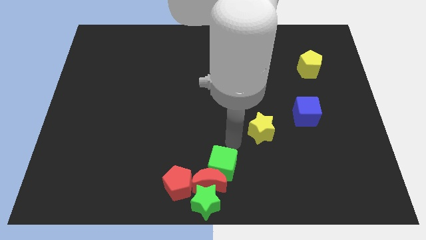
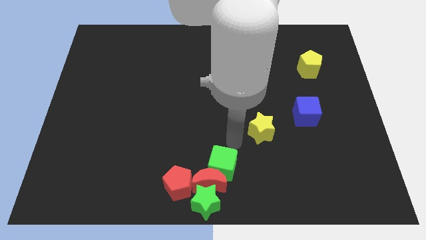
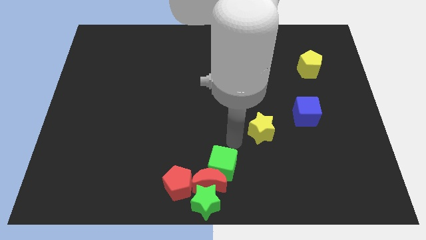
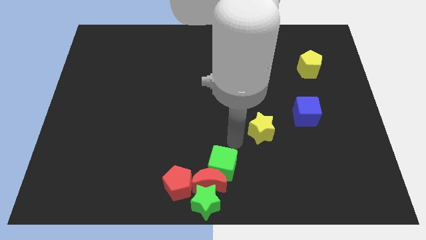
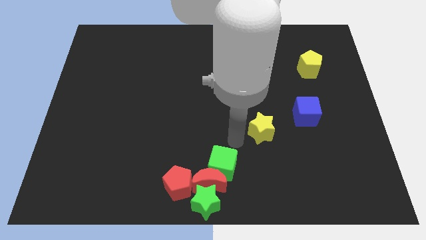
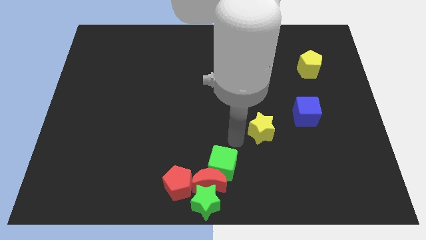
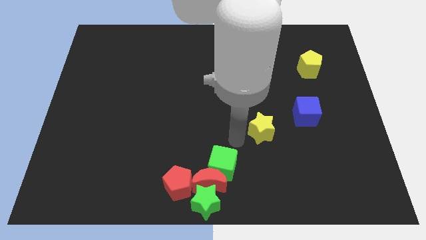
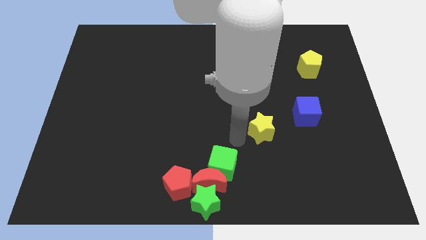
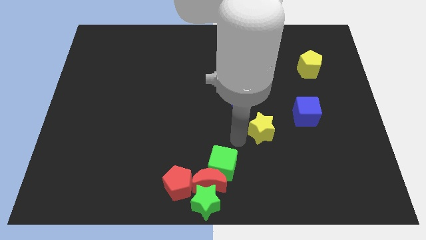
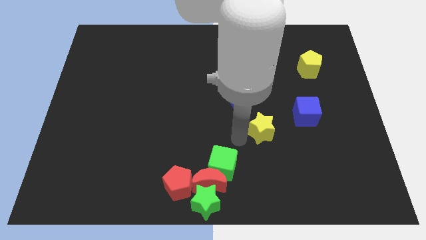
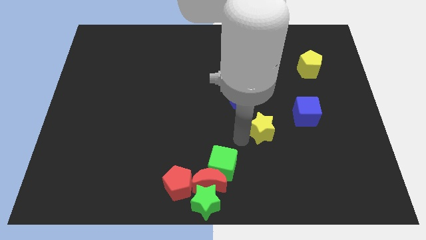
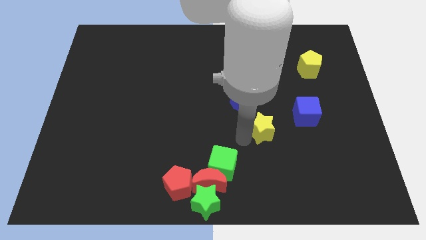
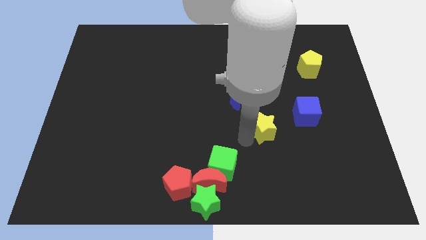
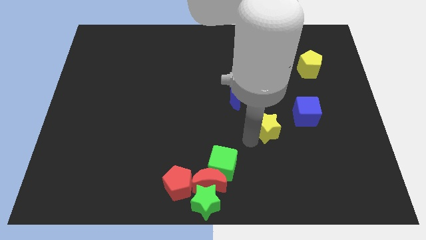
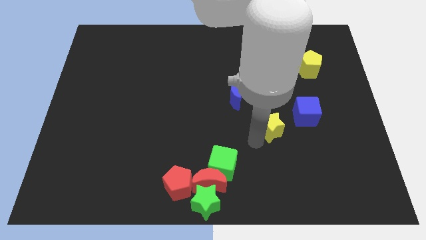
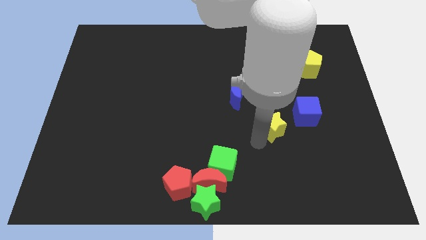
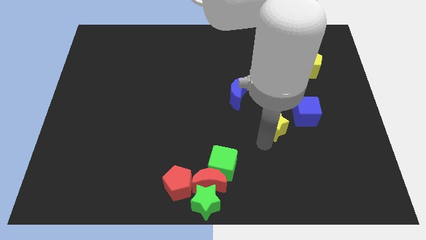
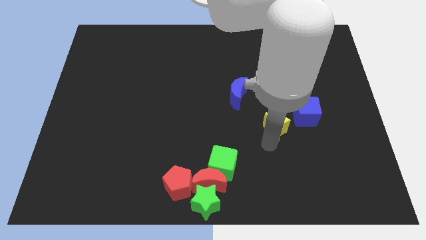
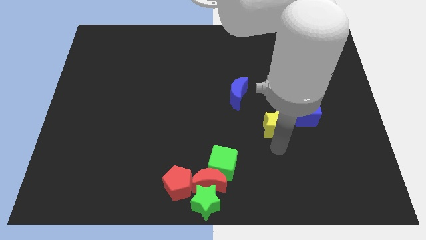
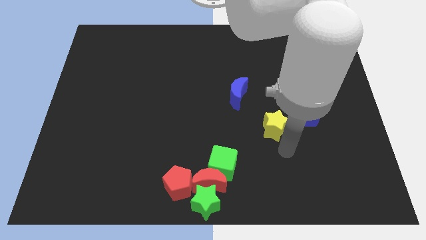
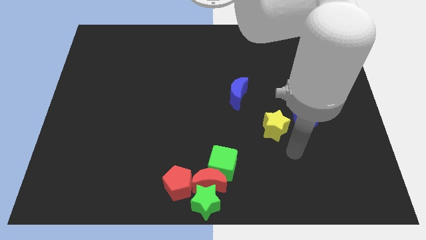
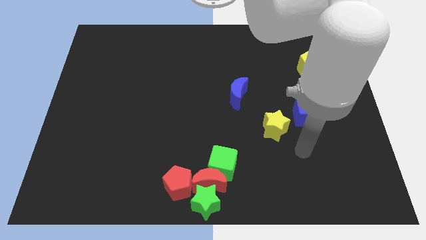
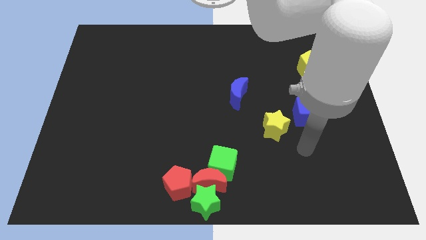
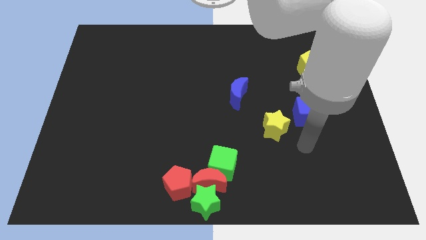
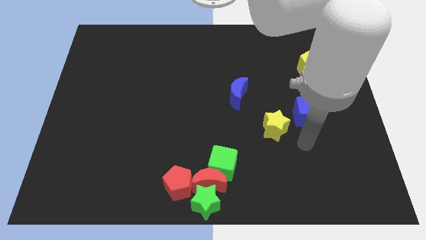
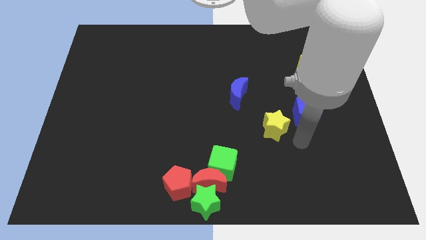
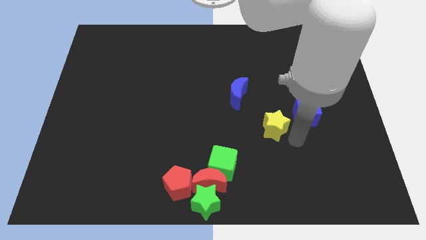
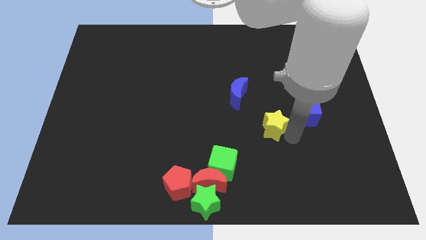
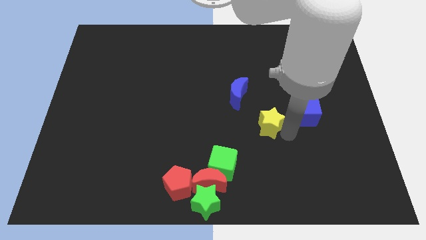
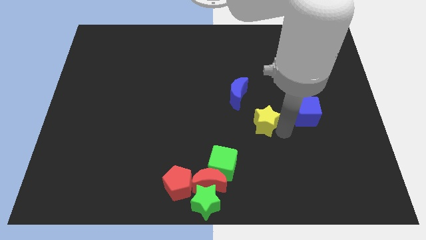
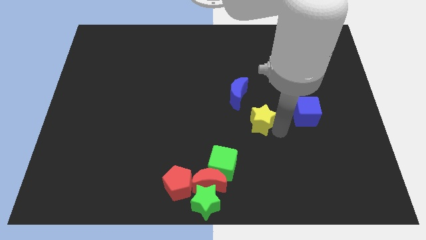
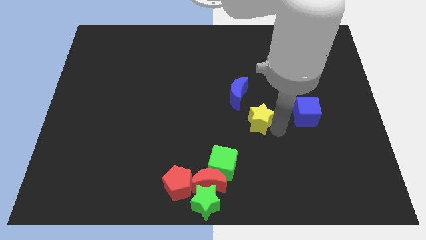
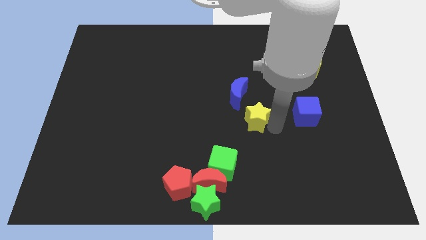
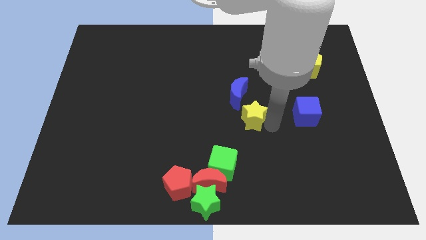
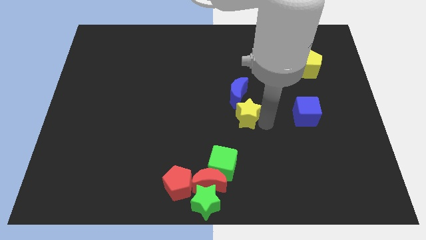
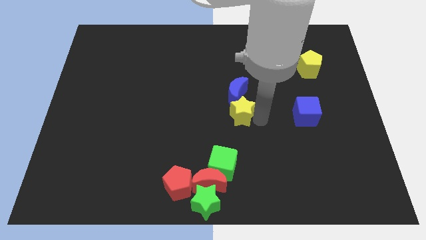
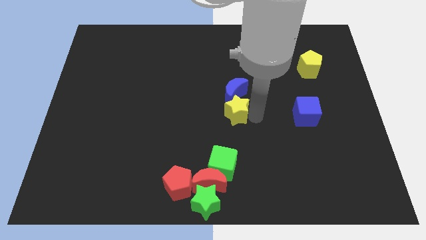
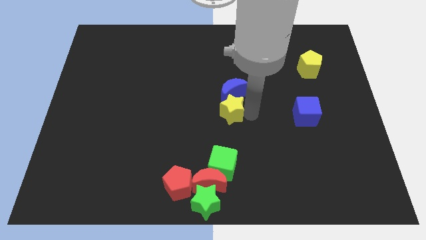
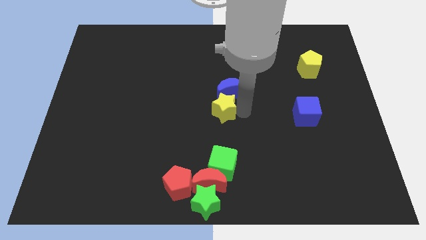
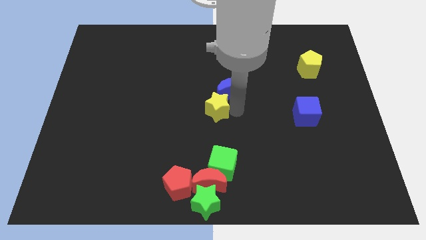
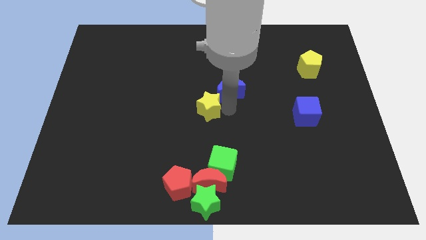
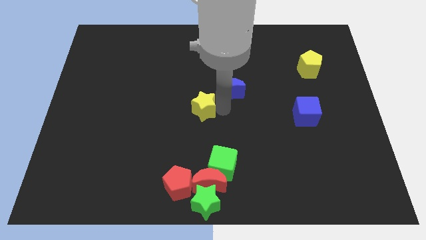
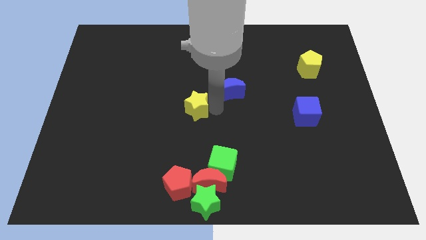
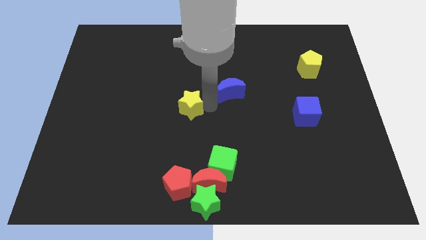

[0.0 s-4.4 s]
move the yellow star to the center of the board

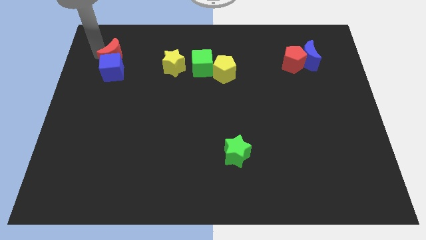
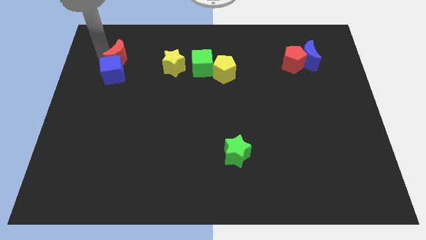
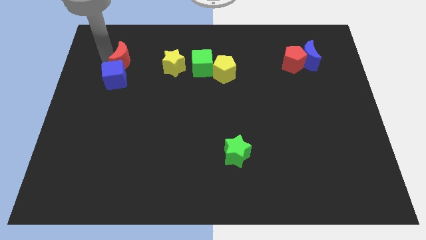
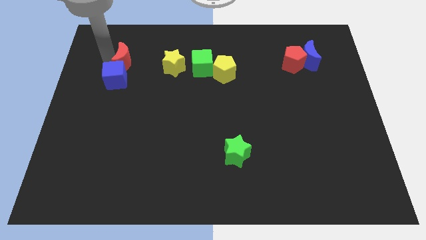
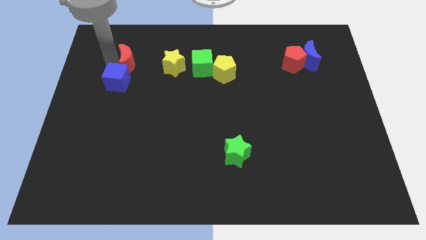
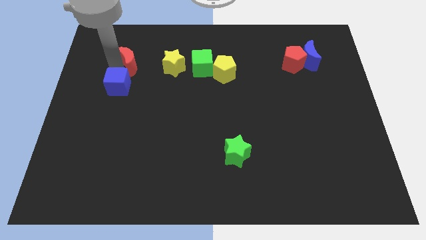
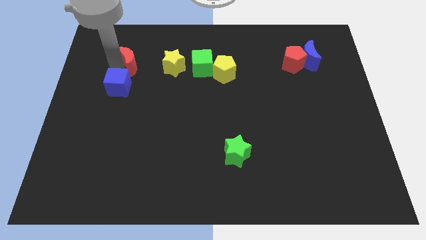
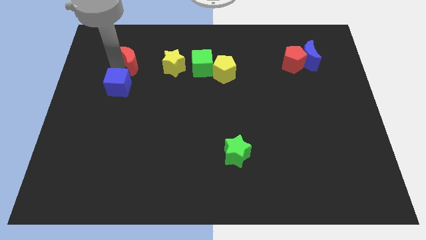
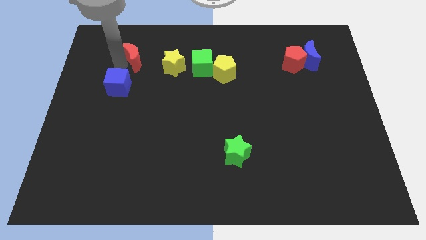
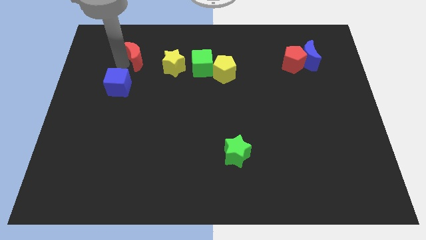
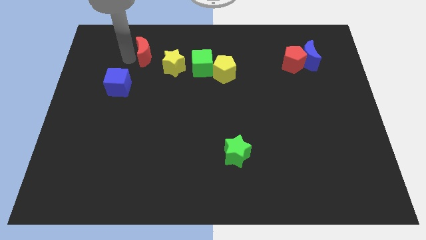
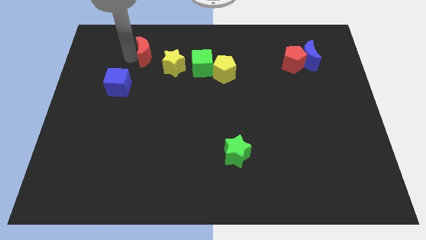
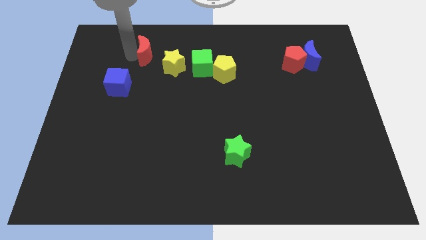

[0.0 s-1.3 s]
separate the red crescent and the blue cube

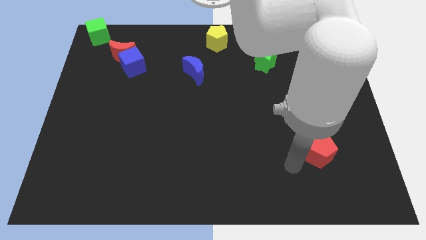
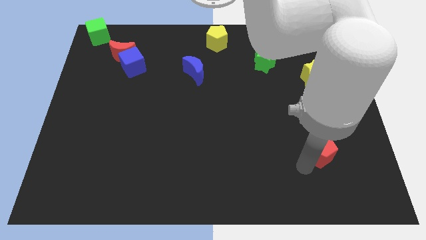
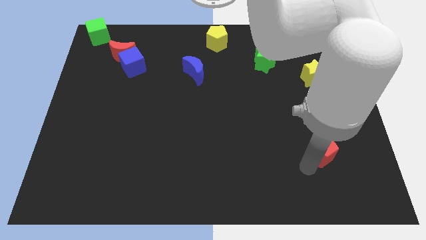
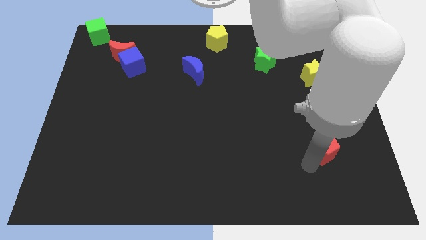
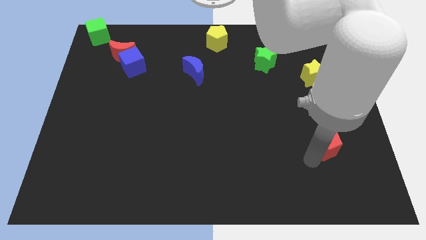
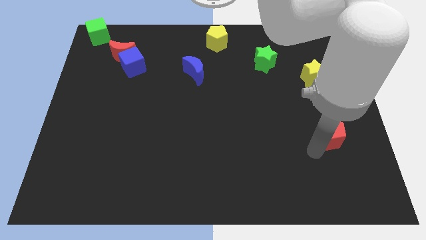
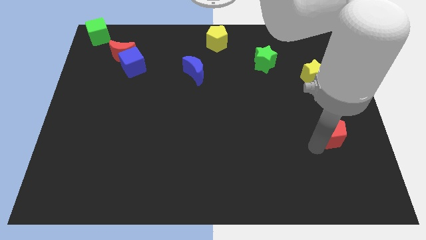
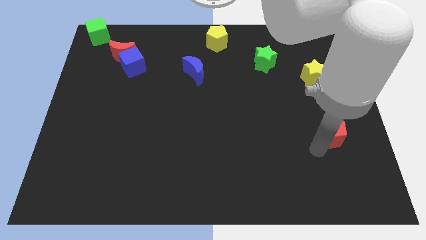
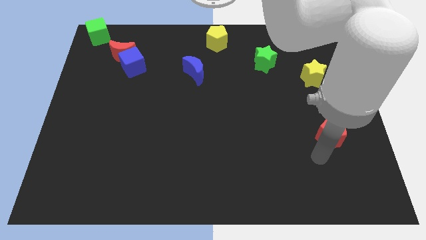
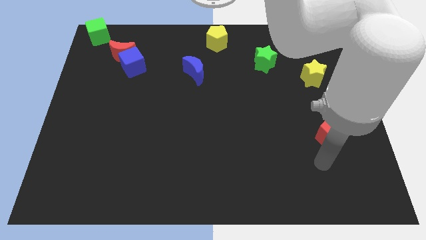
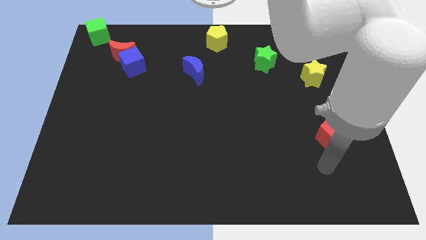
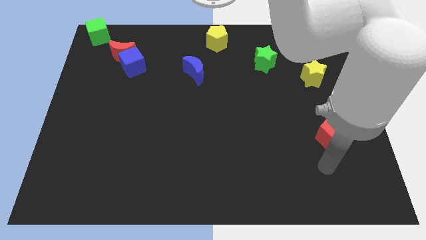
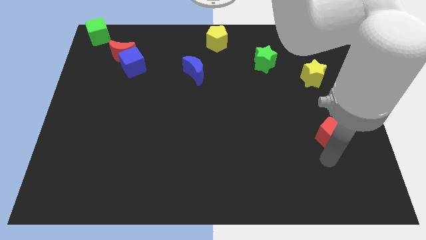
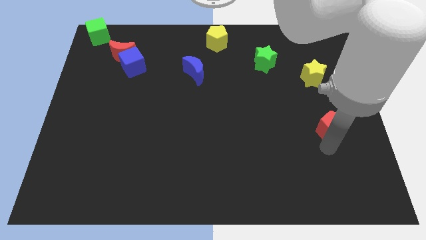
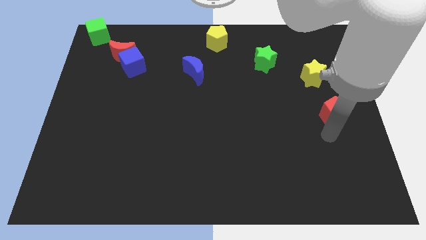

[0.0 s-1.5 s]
move red pentagon to the bottom left corner of yellow star

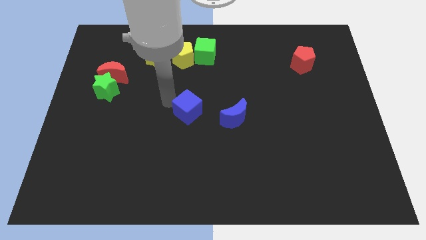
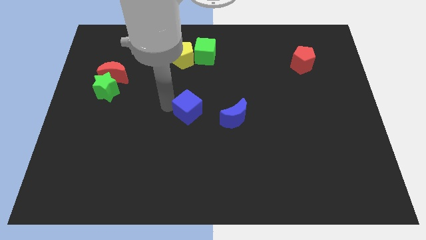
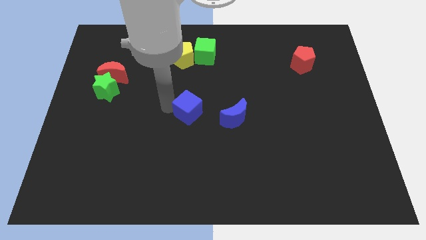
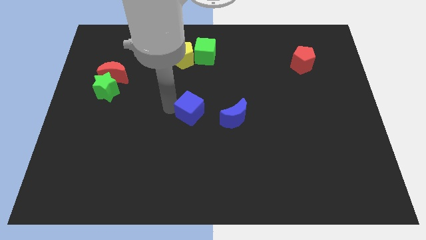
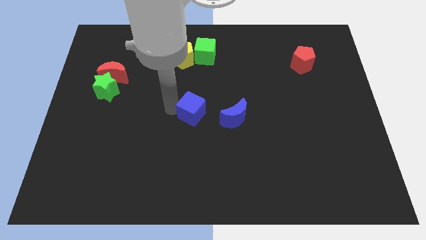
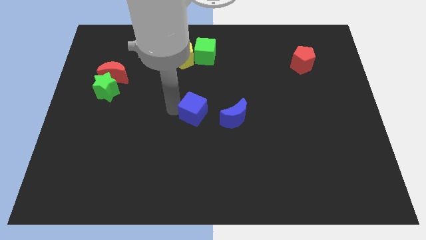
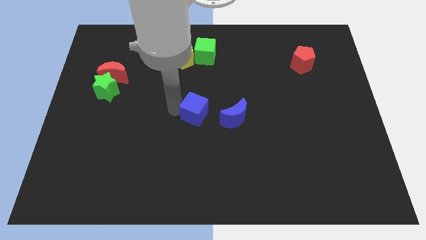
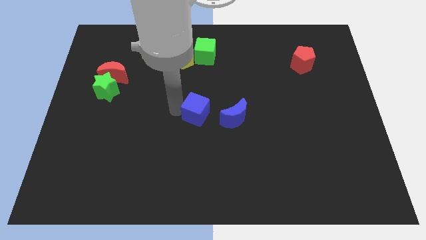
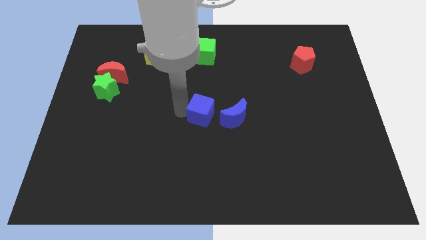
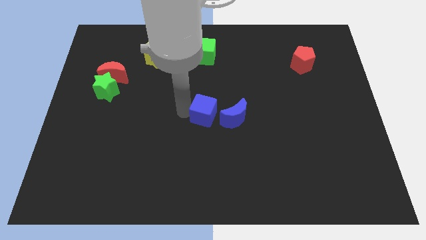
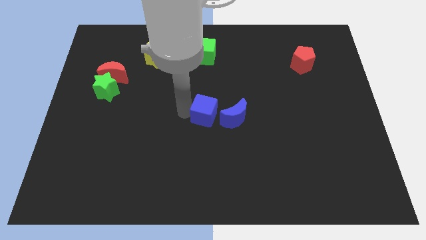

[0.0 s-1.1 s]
place blue cube in center

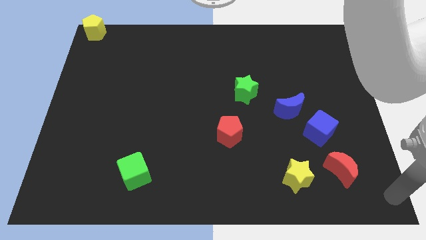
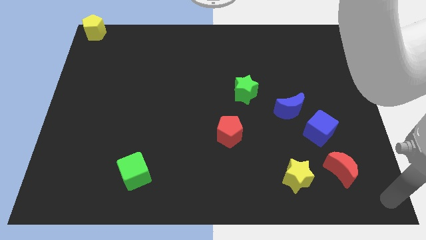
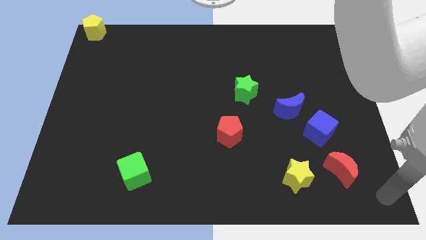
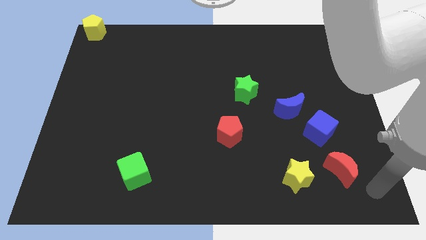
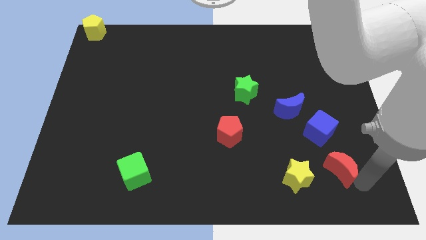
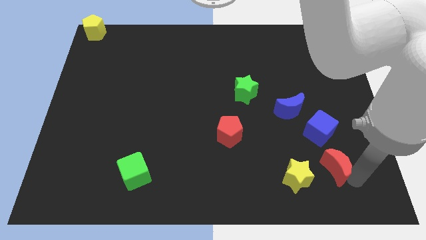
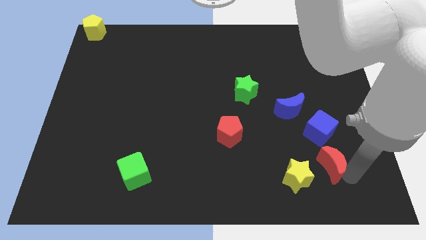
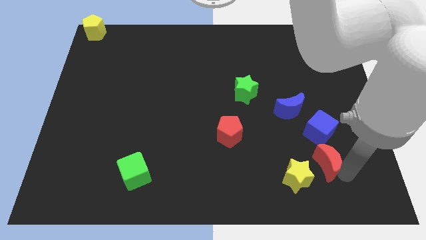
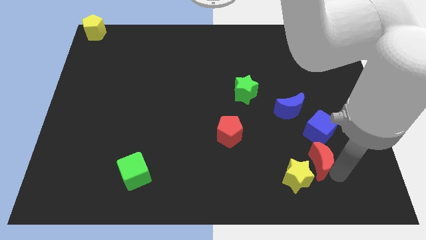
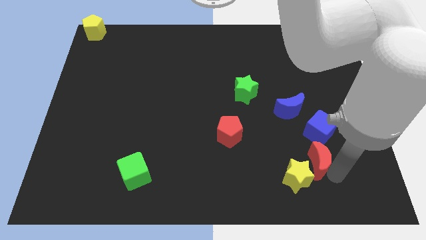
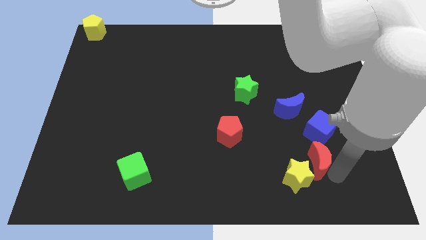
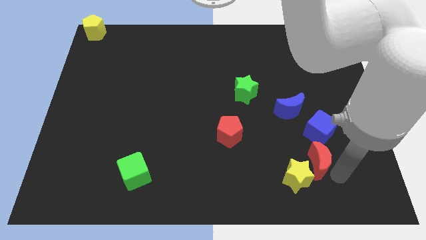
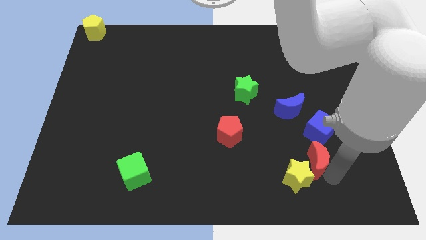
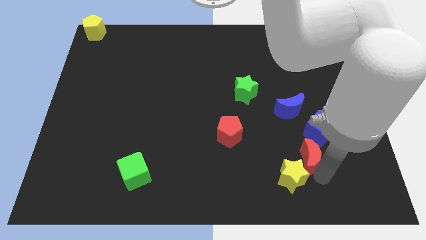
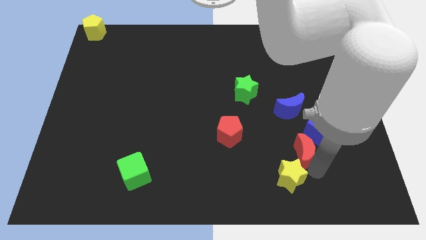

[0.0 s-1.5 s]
place the red crescent above the yellow star
